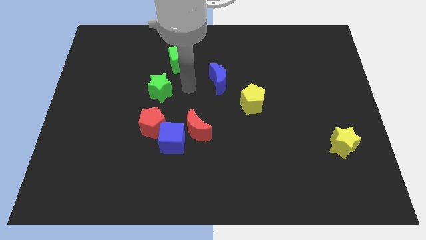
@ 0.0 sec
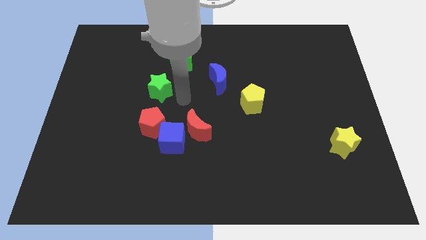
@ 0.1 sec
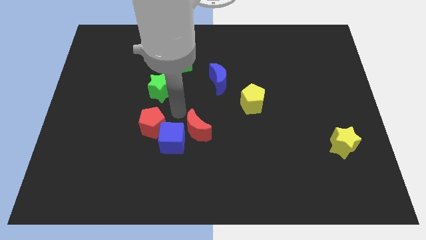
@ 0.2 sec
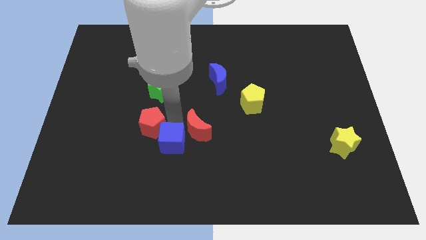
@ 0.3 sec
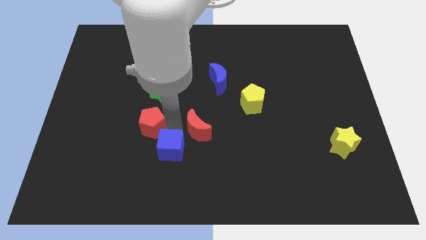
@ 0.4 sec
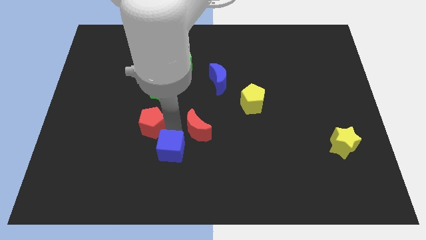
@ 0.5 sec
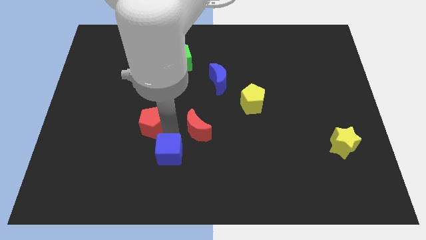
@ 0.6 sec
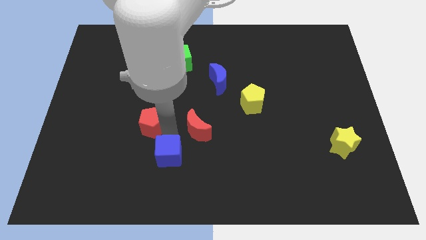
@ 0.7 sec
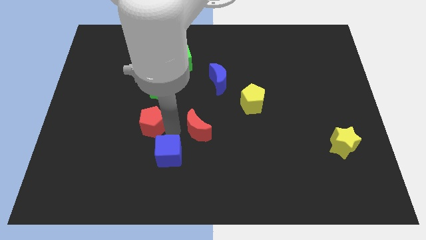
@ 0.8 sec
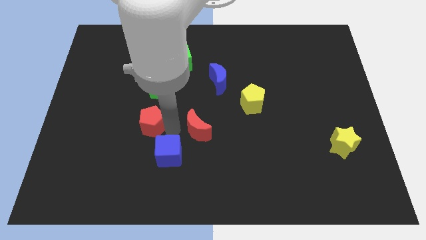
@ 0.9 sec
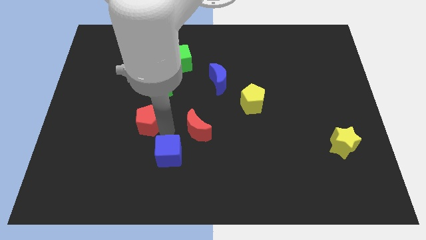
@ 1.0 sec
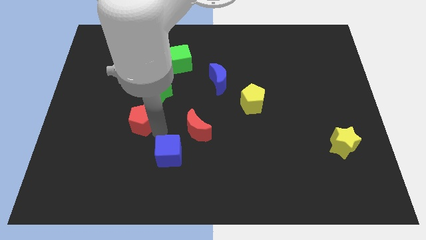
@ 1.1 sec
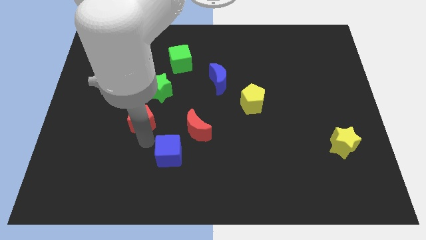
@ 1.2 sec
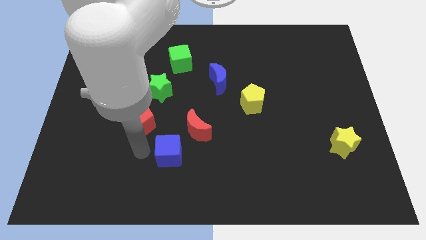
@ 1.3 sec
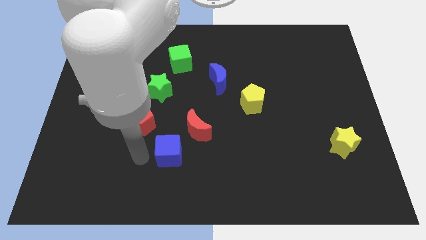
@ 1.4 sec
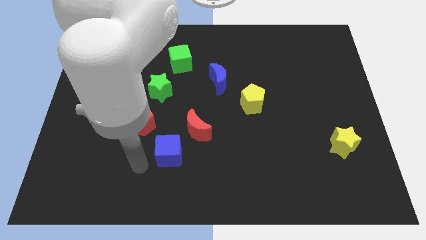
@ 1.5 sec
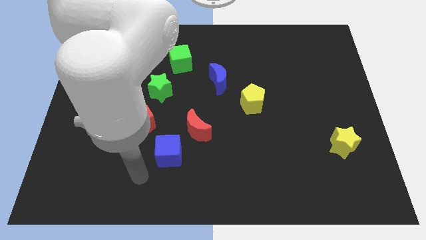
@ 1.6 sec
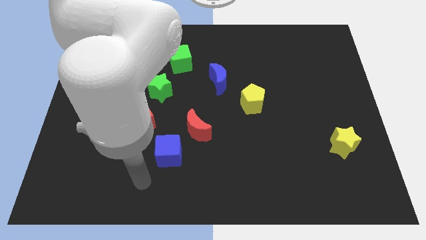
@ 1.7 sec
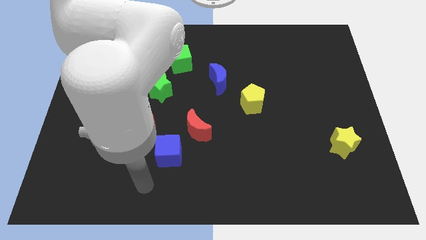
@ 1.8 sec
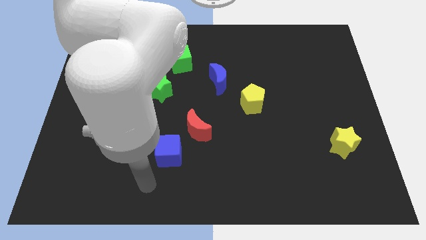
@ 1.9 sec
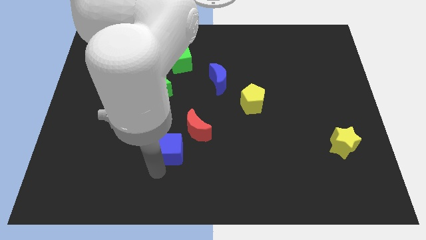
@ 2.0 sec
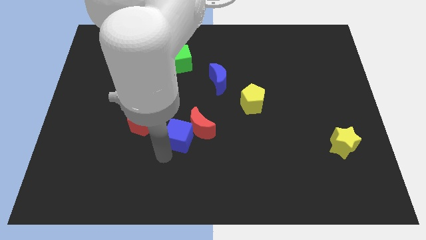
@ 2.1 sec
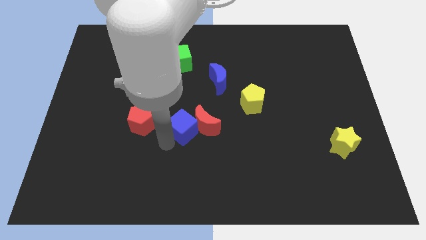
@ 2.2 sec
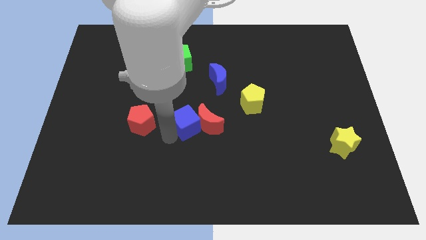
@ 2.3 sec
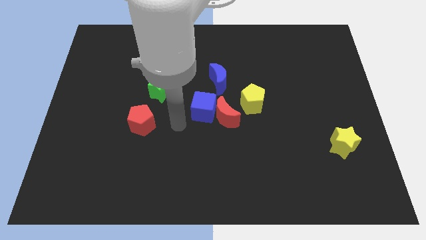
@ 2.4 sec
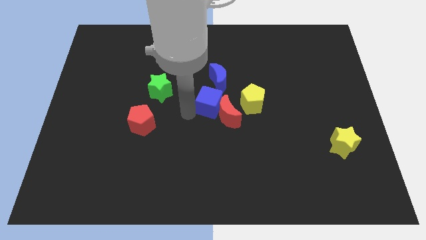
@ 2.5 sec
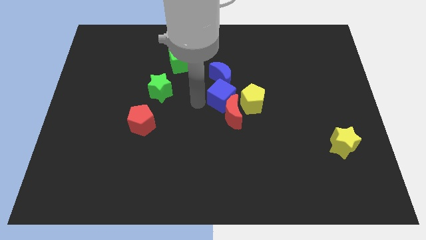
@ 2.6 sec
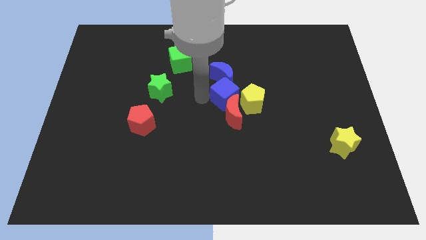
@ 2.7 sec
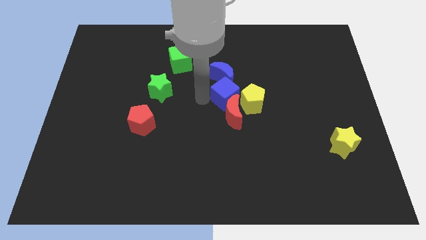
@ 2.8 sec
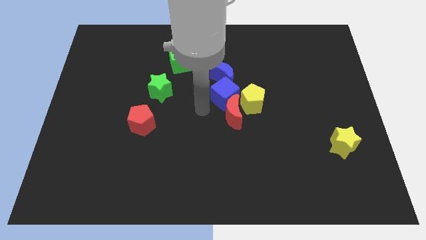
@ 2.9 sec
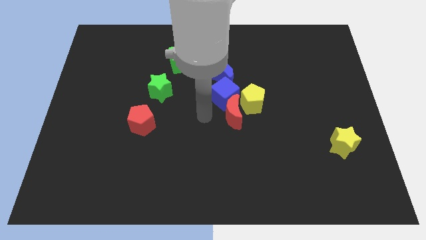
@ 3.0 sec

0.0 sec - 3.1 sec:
move blue cube towards the center of the board

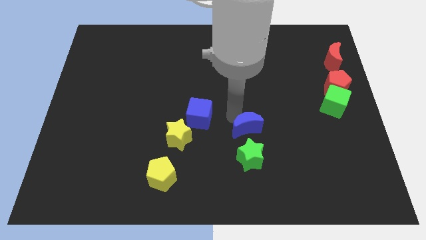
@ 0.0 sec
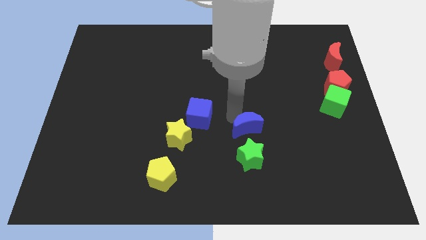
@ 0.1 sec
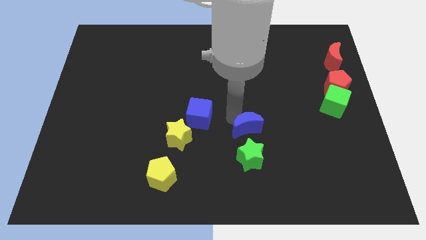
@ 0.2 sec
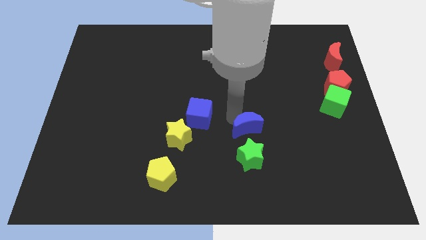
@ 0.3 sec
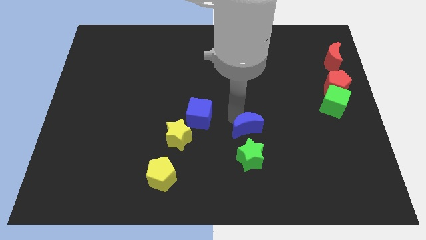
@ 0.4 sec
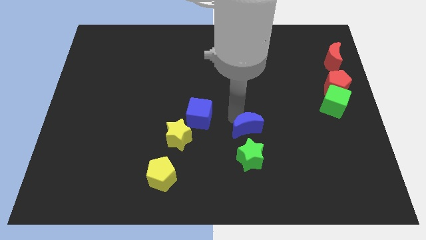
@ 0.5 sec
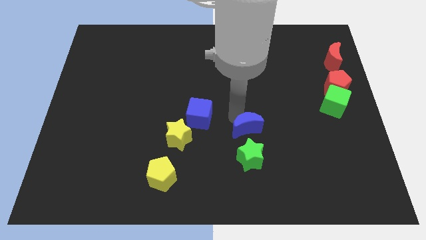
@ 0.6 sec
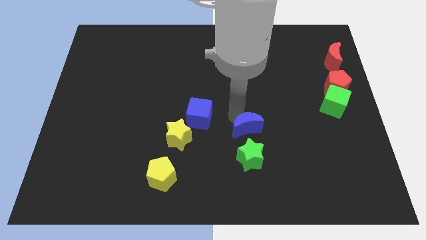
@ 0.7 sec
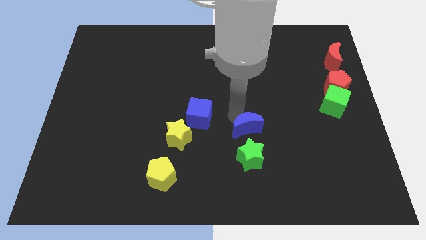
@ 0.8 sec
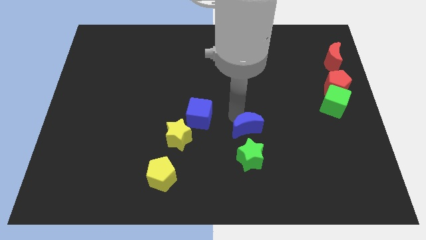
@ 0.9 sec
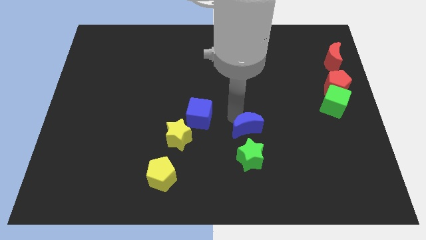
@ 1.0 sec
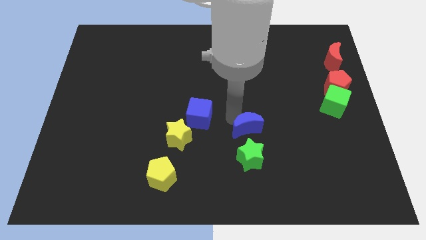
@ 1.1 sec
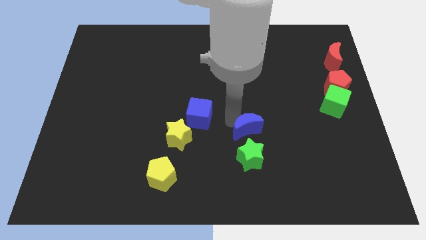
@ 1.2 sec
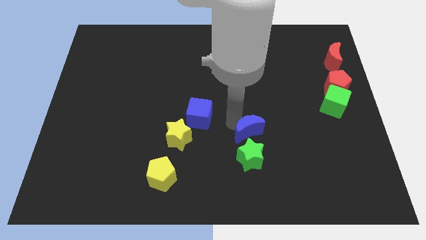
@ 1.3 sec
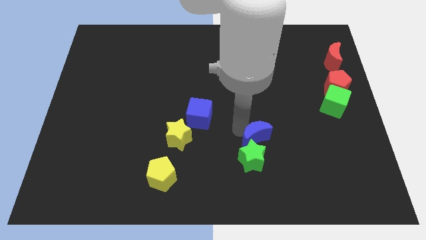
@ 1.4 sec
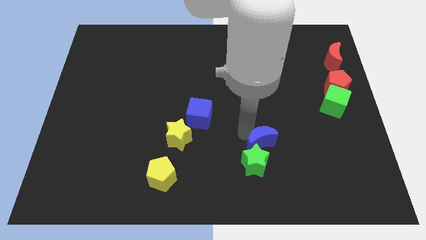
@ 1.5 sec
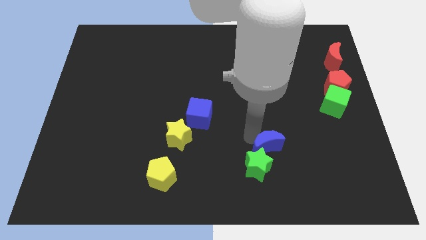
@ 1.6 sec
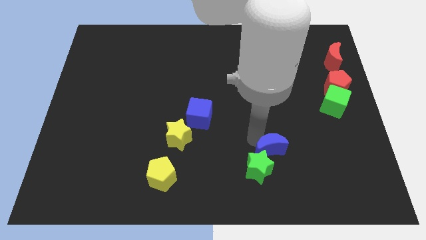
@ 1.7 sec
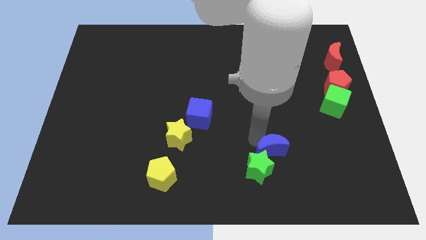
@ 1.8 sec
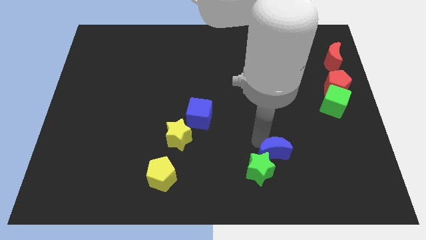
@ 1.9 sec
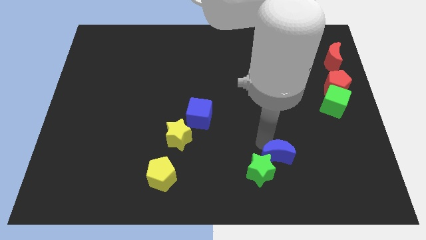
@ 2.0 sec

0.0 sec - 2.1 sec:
slide the blue moon into the green star

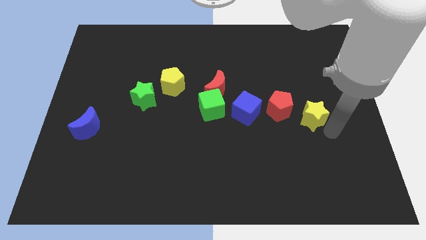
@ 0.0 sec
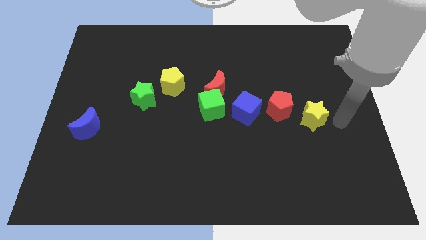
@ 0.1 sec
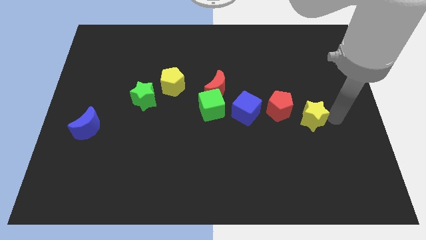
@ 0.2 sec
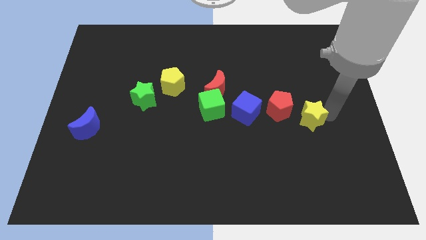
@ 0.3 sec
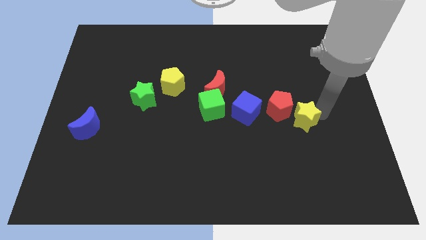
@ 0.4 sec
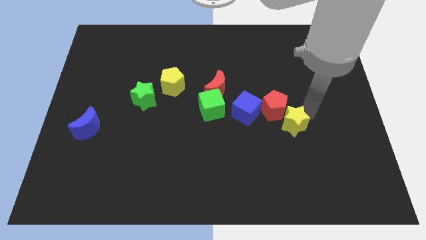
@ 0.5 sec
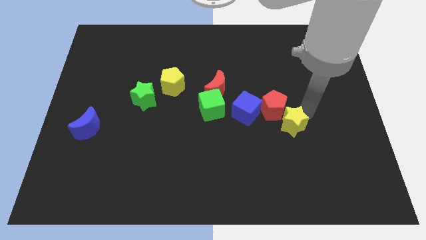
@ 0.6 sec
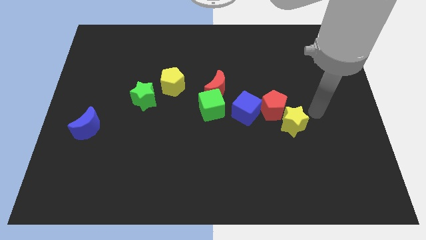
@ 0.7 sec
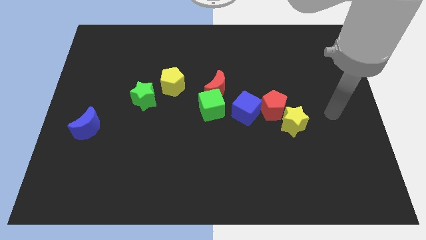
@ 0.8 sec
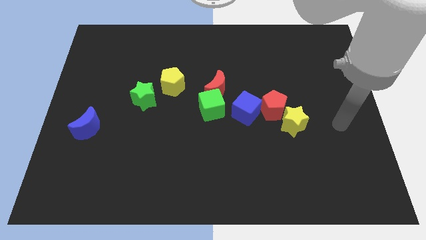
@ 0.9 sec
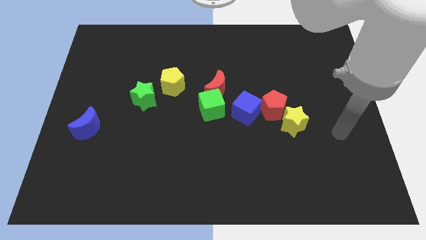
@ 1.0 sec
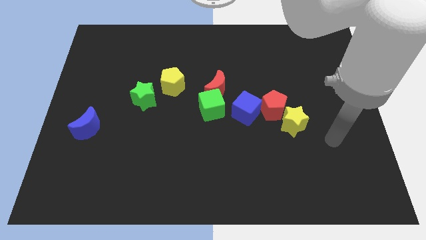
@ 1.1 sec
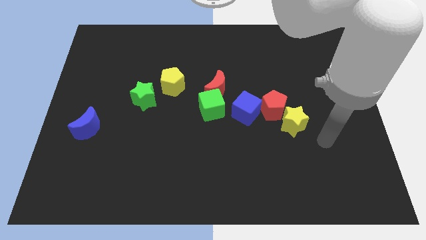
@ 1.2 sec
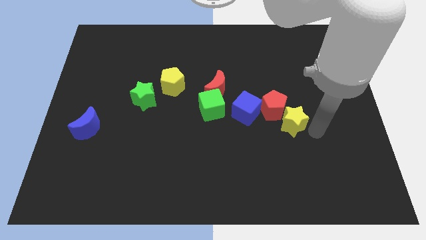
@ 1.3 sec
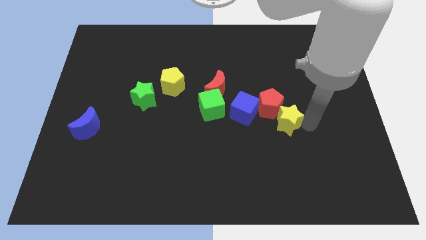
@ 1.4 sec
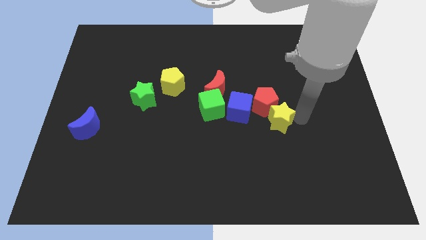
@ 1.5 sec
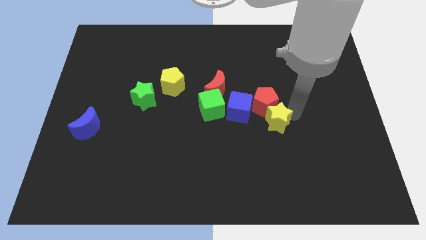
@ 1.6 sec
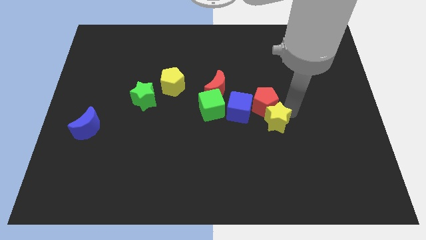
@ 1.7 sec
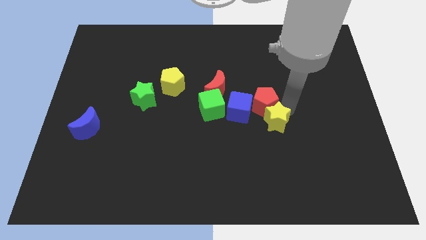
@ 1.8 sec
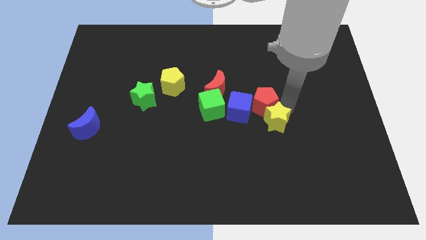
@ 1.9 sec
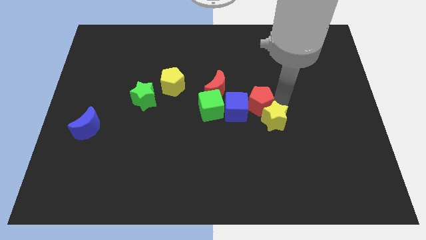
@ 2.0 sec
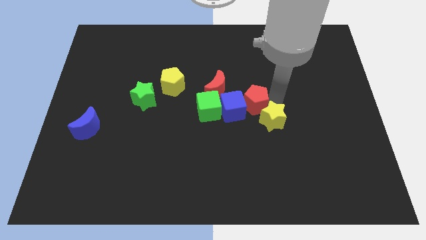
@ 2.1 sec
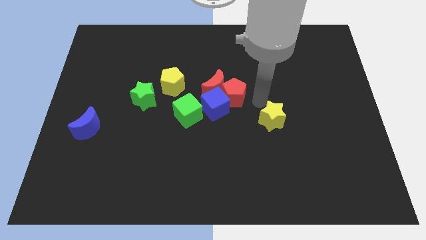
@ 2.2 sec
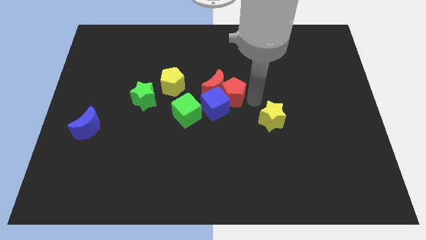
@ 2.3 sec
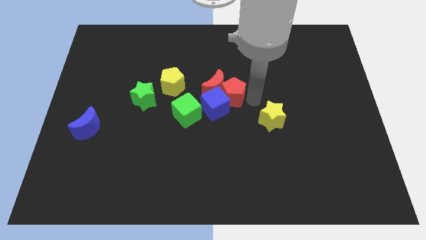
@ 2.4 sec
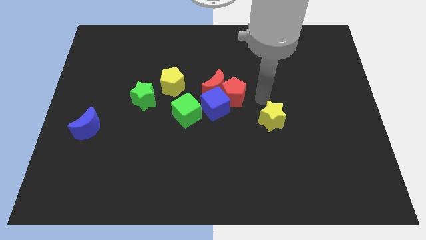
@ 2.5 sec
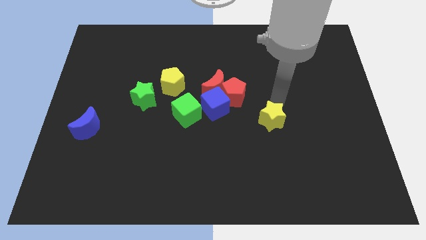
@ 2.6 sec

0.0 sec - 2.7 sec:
push the yellow star along with red pentagon

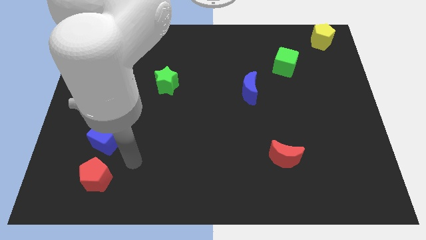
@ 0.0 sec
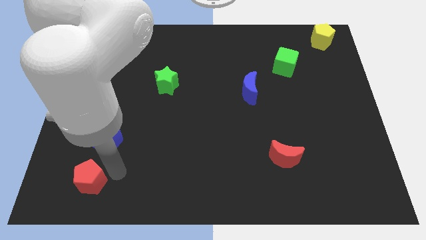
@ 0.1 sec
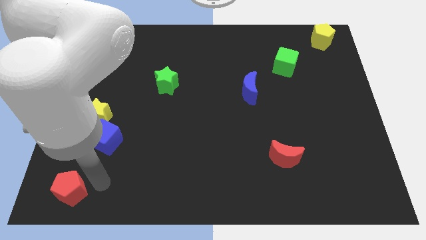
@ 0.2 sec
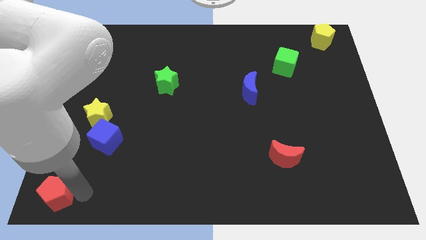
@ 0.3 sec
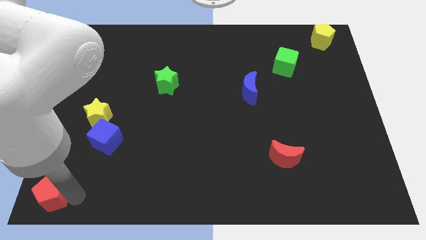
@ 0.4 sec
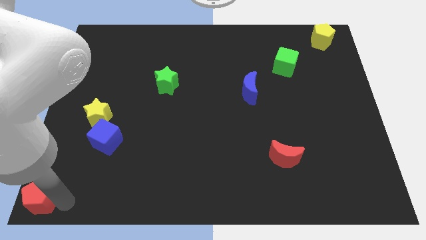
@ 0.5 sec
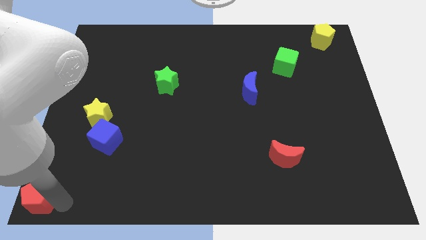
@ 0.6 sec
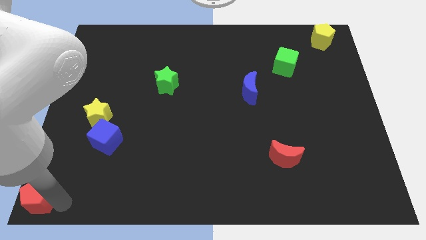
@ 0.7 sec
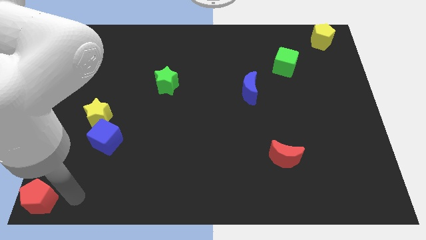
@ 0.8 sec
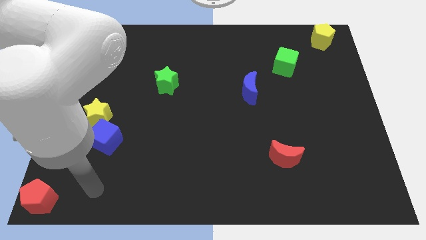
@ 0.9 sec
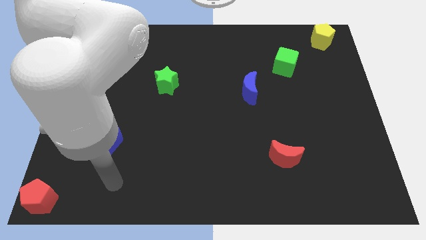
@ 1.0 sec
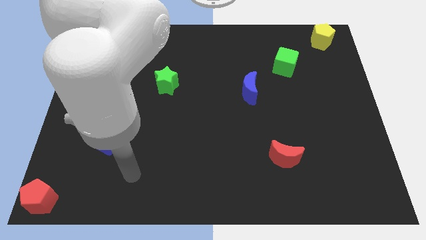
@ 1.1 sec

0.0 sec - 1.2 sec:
push the red pentagon to the bottom left side of the table
